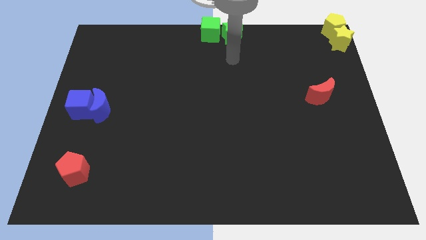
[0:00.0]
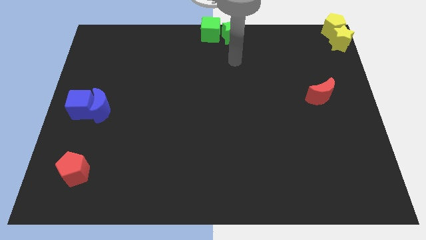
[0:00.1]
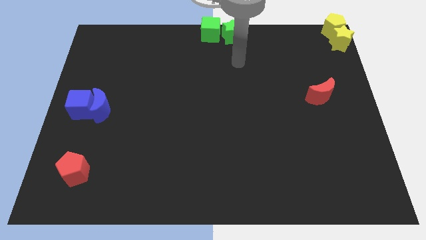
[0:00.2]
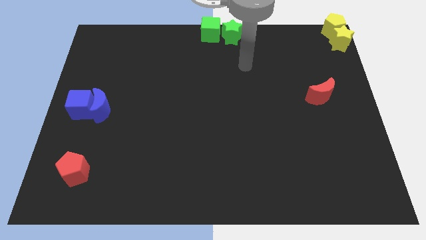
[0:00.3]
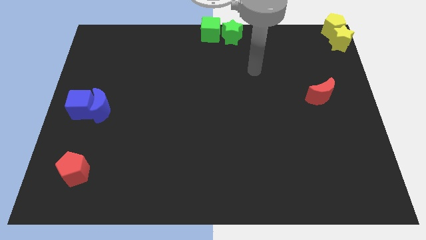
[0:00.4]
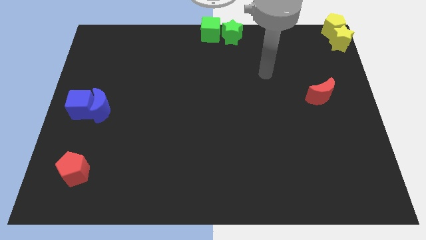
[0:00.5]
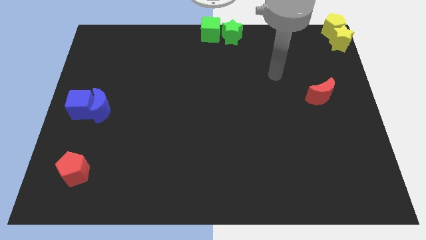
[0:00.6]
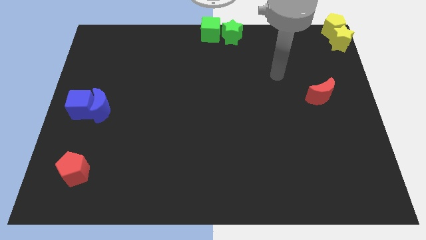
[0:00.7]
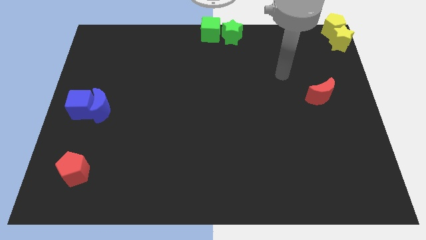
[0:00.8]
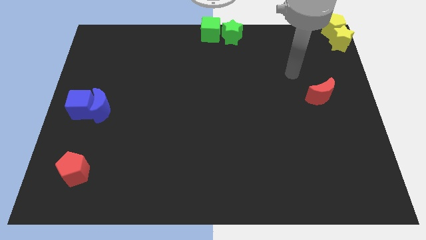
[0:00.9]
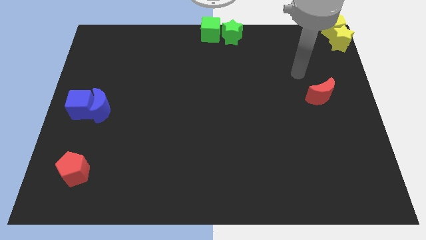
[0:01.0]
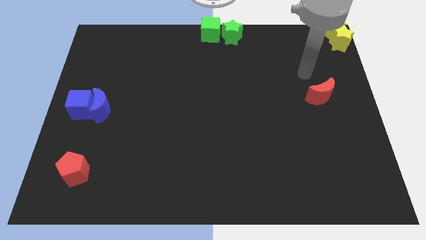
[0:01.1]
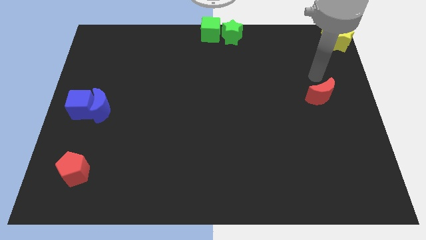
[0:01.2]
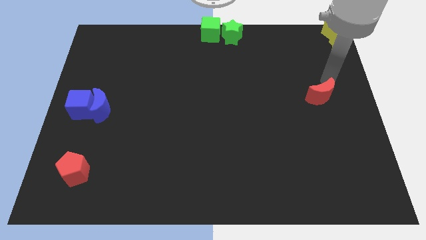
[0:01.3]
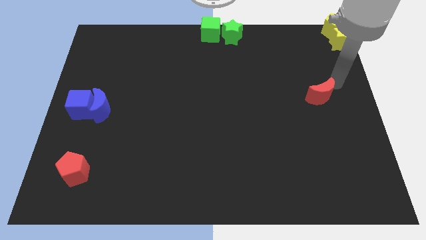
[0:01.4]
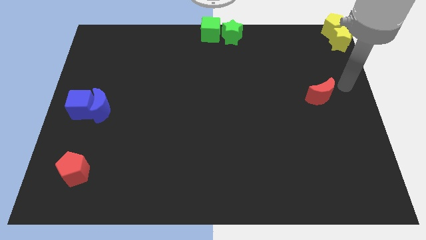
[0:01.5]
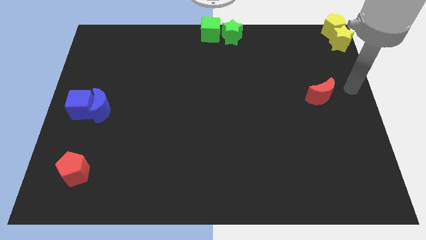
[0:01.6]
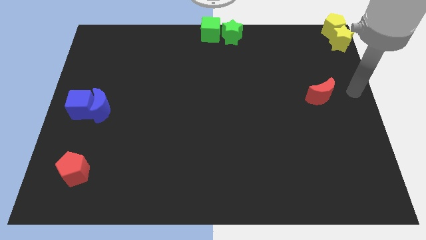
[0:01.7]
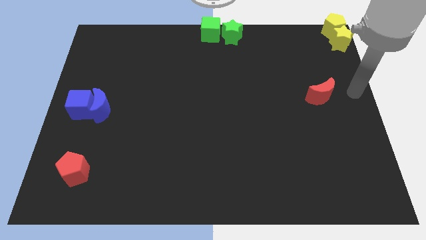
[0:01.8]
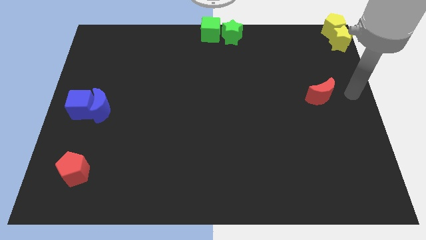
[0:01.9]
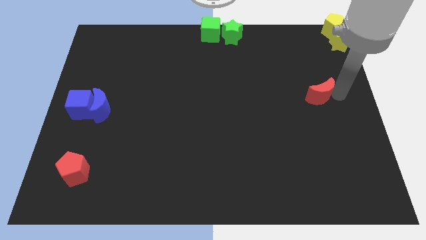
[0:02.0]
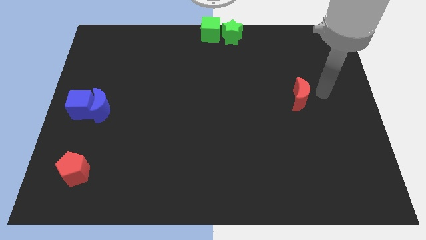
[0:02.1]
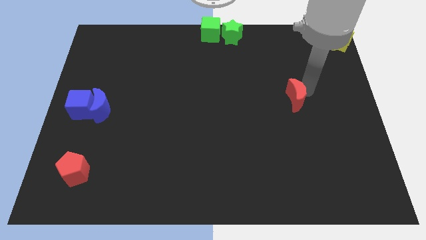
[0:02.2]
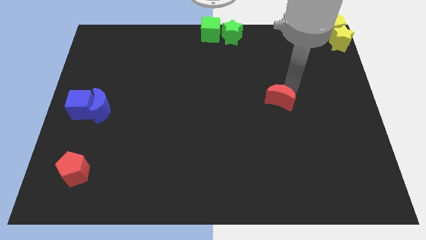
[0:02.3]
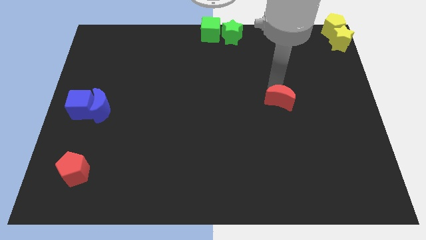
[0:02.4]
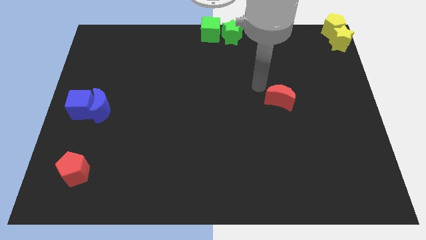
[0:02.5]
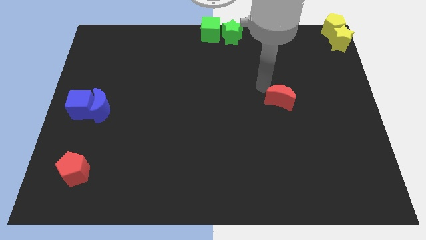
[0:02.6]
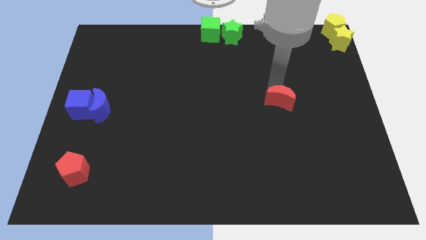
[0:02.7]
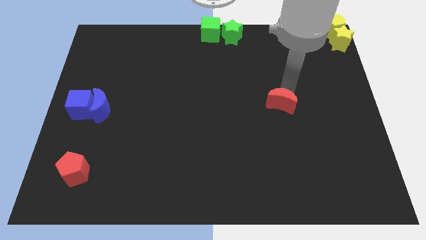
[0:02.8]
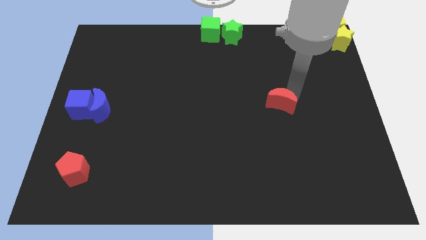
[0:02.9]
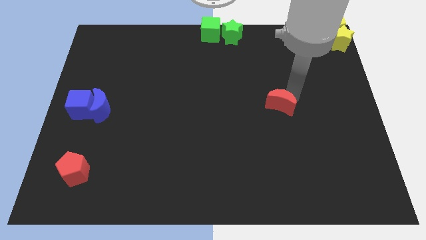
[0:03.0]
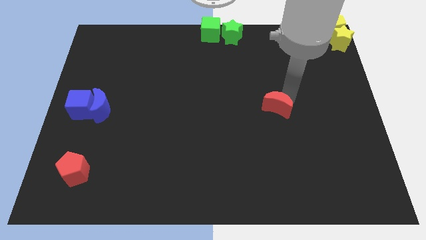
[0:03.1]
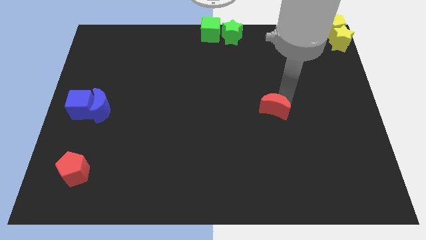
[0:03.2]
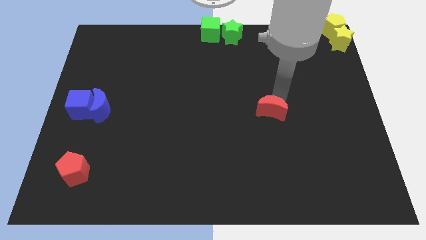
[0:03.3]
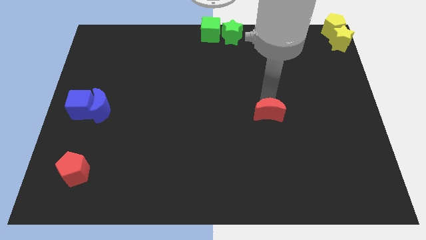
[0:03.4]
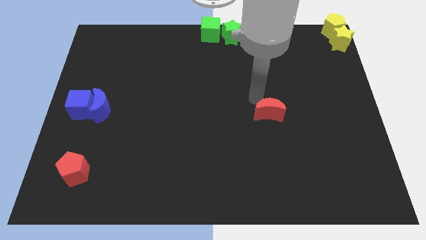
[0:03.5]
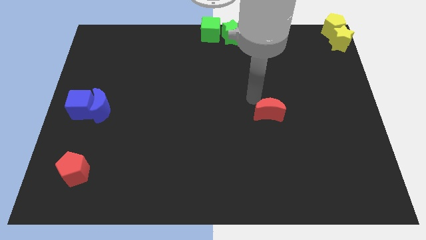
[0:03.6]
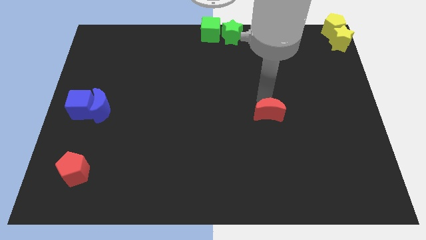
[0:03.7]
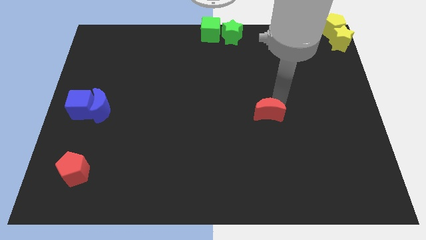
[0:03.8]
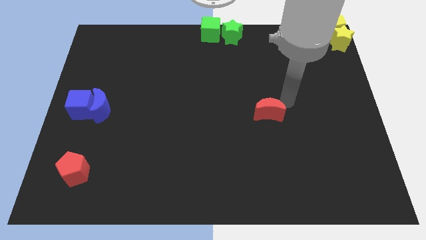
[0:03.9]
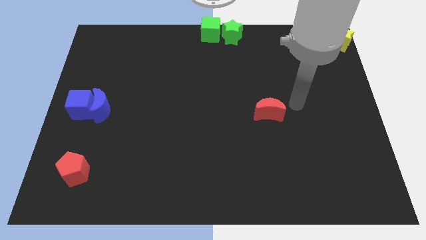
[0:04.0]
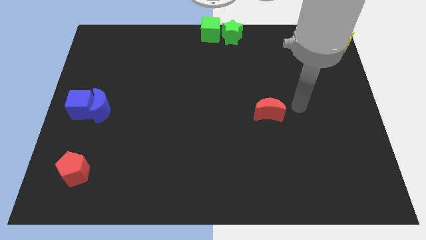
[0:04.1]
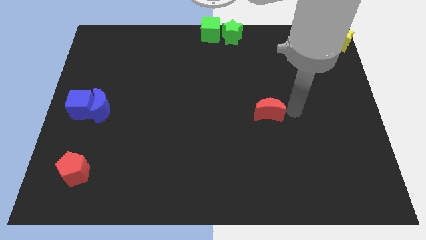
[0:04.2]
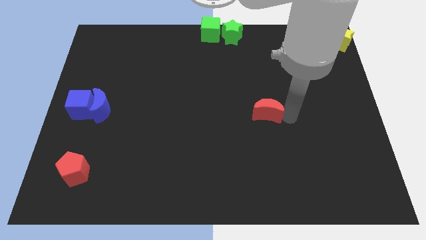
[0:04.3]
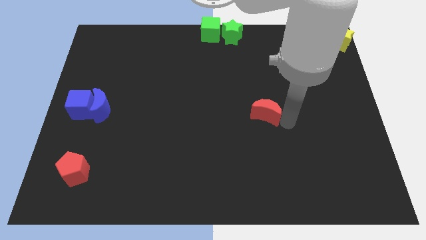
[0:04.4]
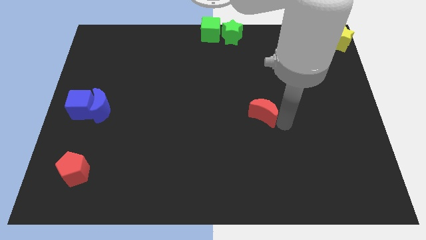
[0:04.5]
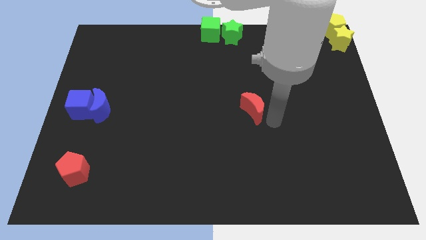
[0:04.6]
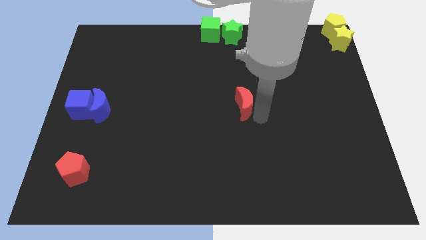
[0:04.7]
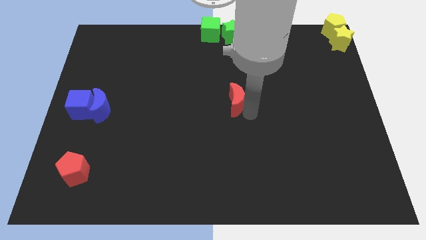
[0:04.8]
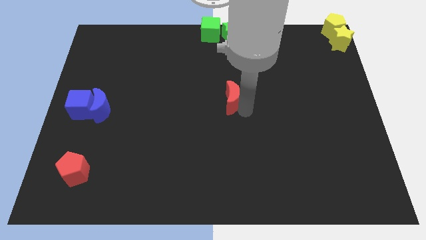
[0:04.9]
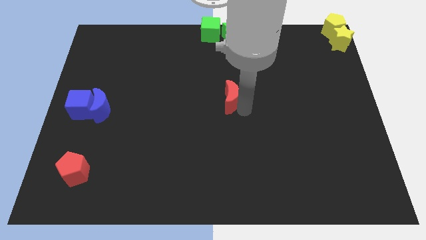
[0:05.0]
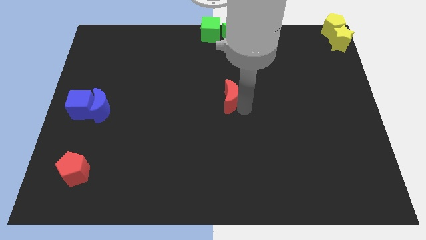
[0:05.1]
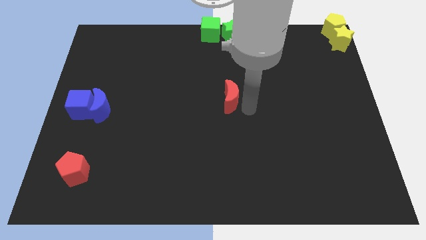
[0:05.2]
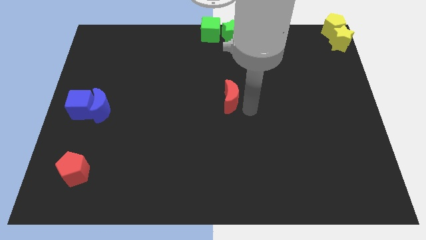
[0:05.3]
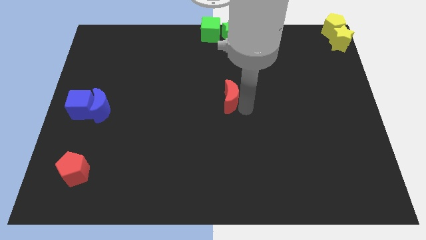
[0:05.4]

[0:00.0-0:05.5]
move the red crescent slightly towards the center of the board

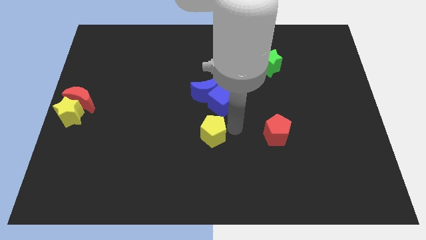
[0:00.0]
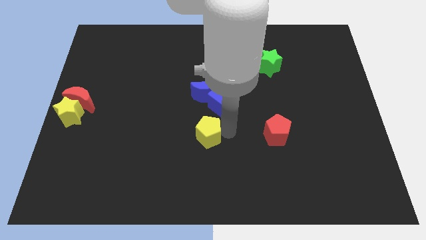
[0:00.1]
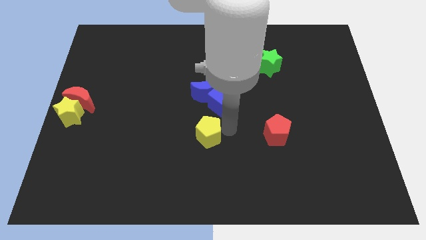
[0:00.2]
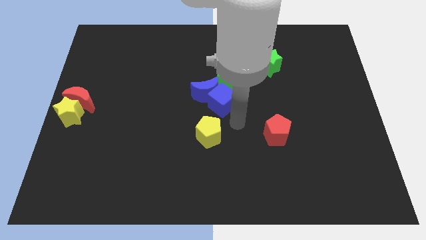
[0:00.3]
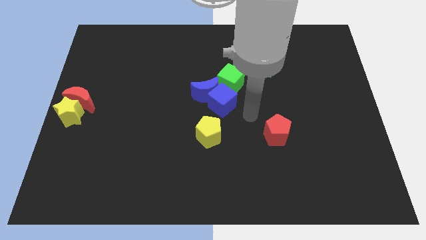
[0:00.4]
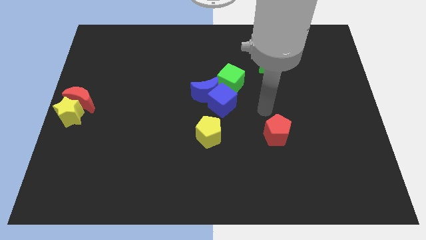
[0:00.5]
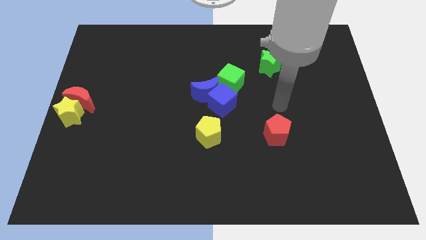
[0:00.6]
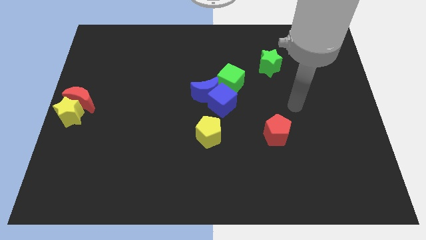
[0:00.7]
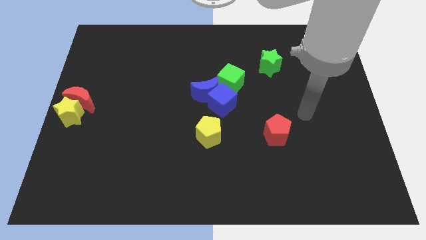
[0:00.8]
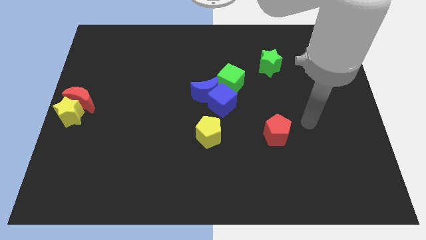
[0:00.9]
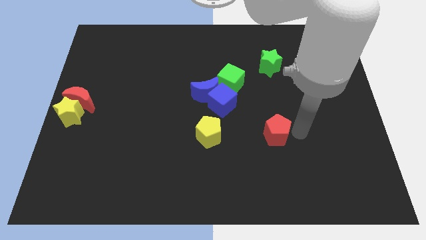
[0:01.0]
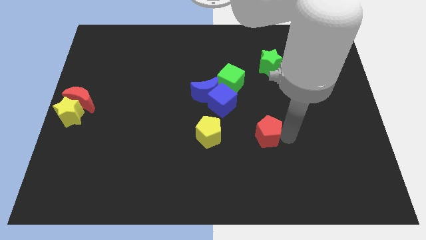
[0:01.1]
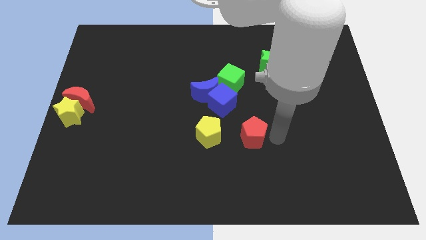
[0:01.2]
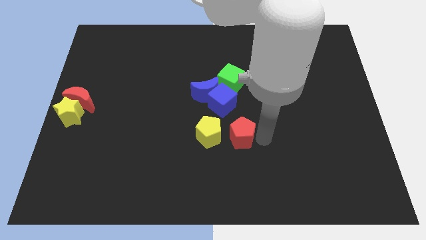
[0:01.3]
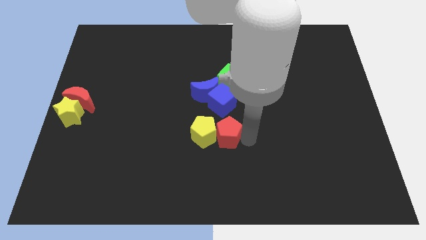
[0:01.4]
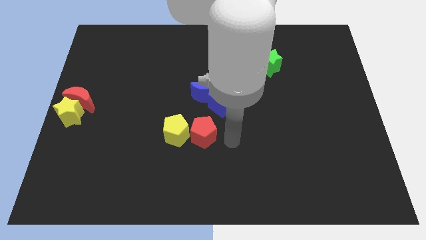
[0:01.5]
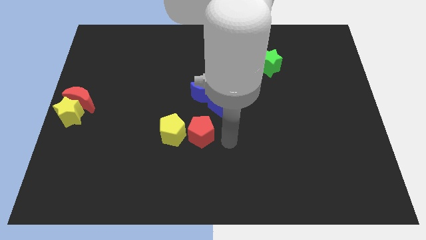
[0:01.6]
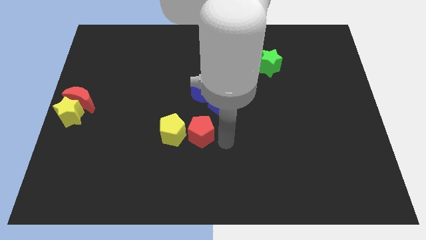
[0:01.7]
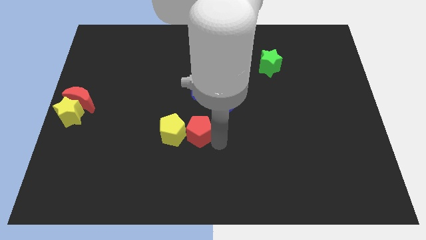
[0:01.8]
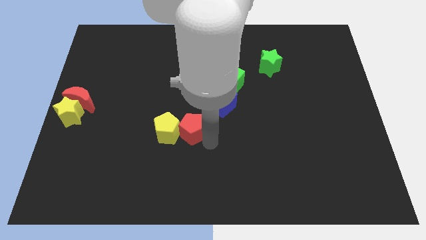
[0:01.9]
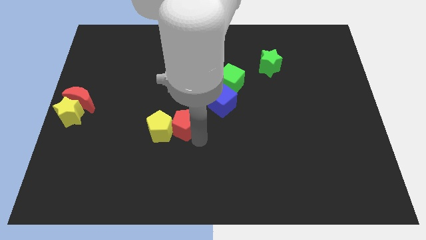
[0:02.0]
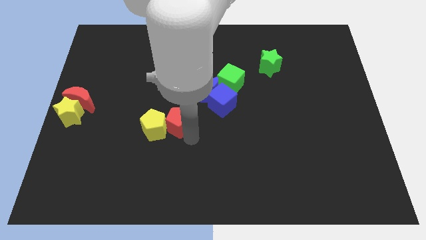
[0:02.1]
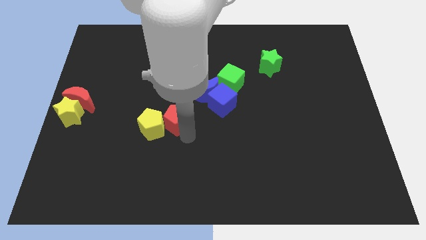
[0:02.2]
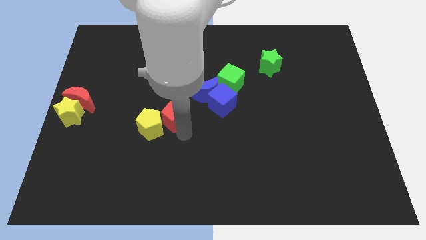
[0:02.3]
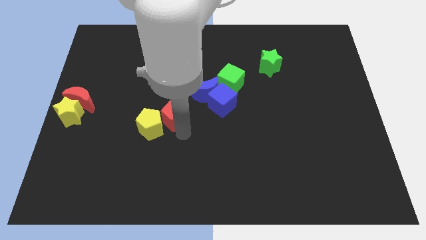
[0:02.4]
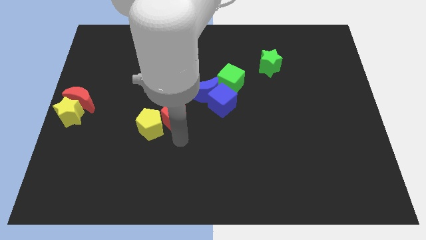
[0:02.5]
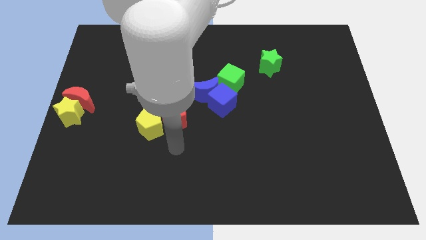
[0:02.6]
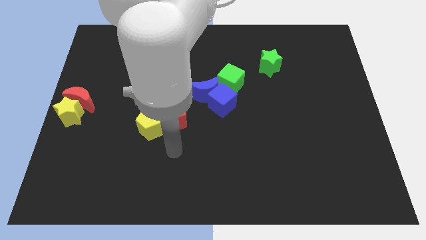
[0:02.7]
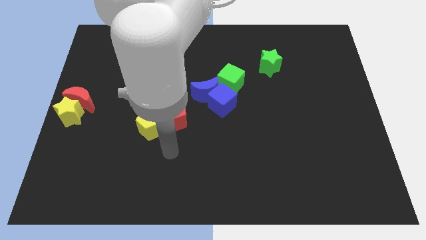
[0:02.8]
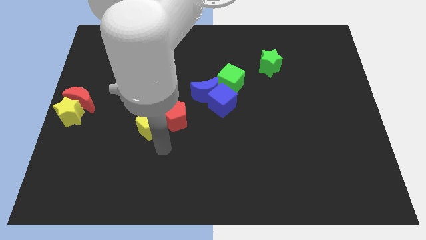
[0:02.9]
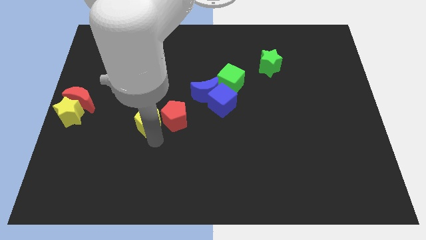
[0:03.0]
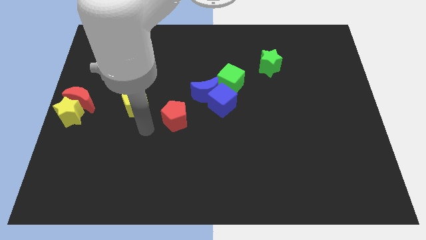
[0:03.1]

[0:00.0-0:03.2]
push the pentagons towards the left side of the board

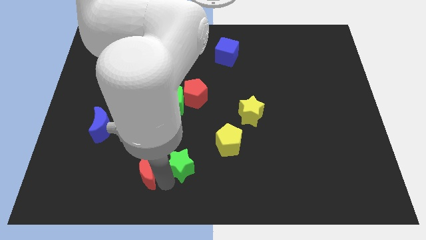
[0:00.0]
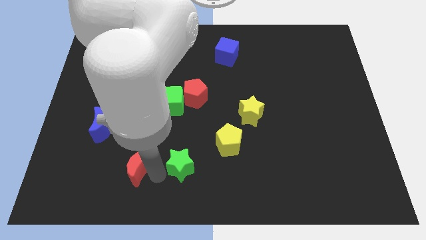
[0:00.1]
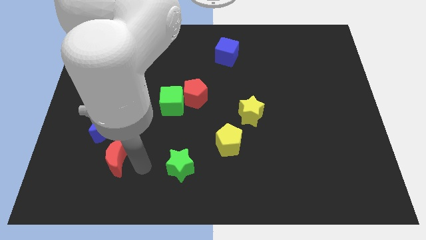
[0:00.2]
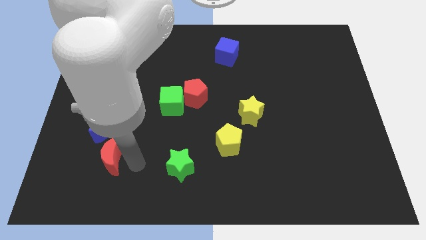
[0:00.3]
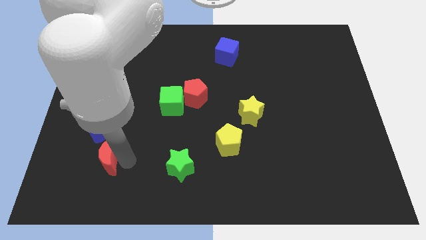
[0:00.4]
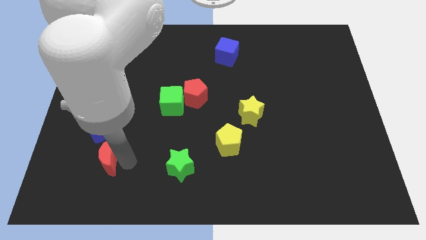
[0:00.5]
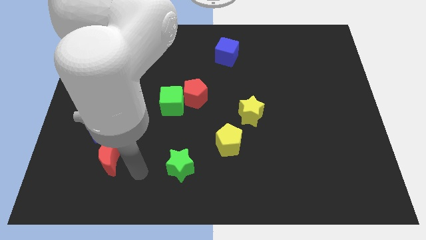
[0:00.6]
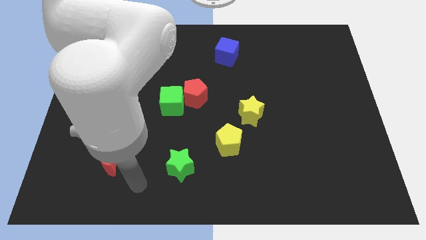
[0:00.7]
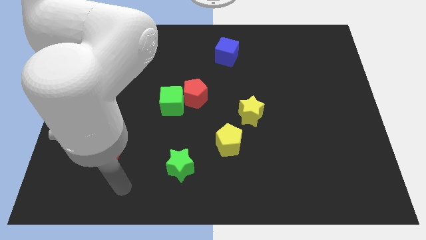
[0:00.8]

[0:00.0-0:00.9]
push the red moon towards the left side of the board
